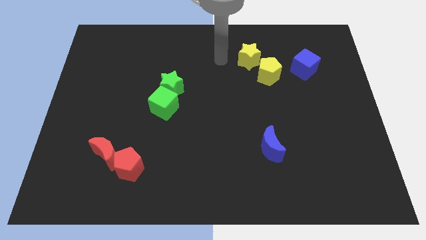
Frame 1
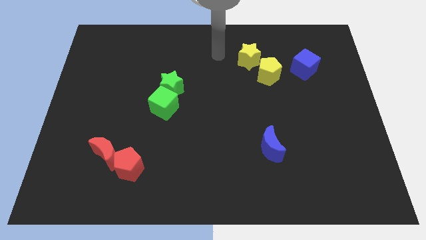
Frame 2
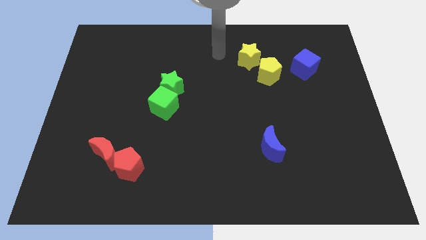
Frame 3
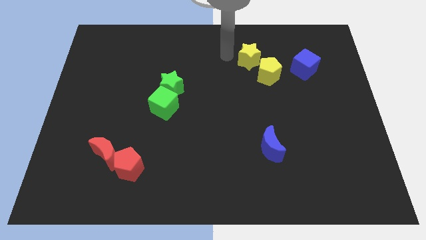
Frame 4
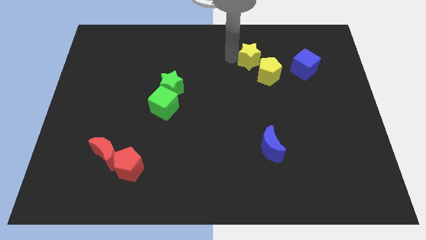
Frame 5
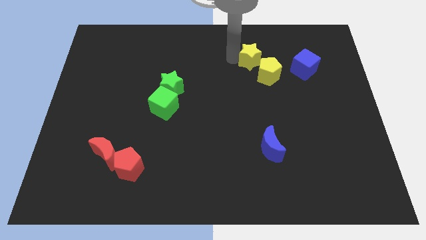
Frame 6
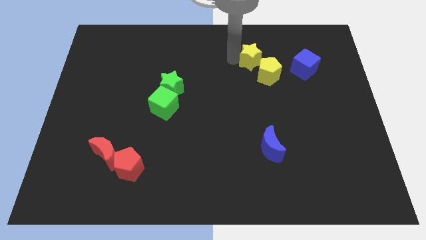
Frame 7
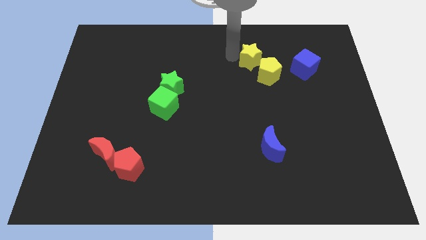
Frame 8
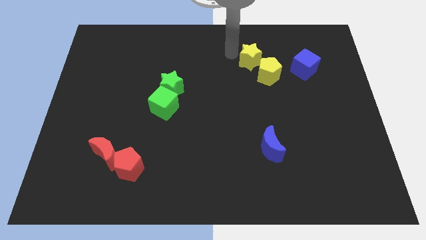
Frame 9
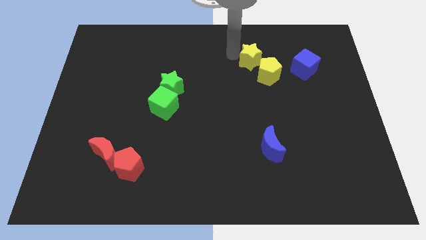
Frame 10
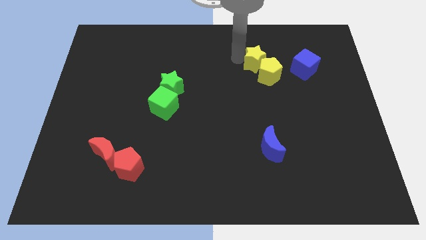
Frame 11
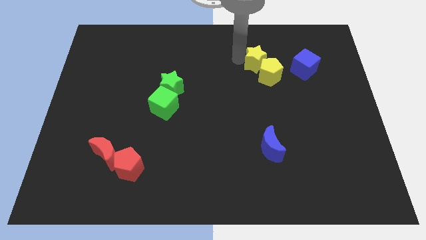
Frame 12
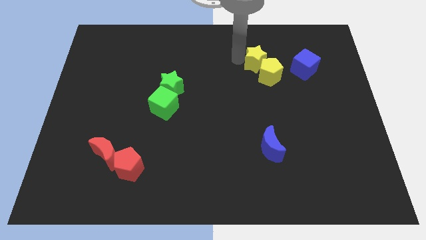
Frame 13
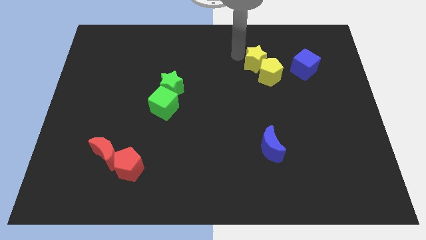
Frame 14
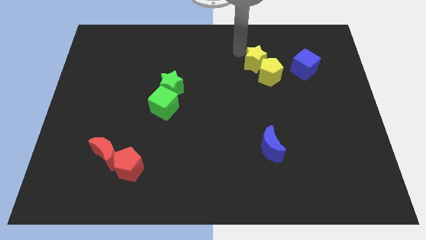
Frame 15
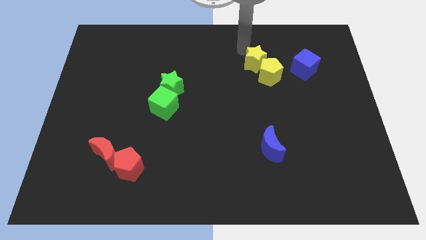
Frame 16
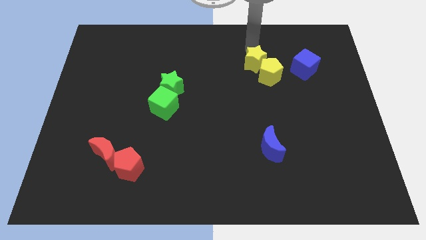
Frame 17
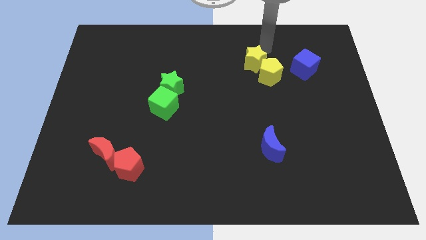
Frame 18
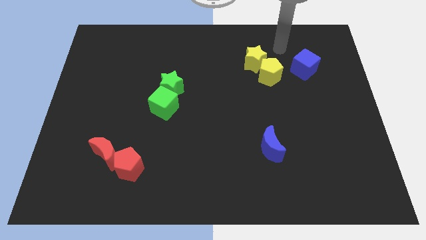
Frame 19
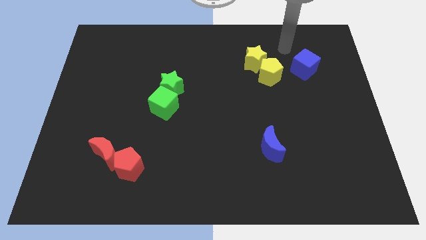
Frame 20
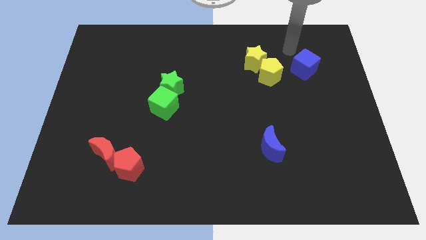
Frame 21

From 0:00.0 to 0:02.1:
slightly push the yellow star into the yellow pentagon

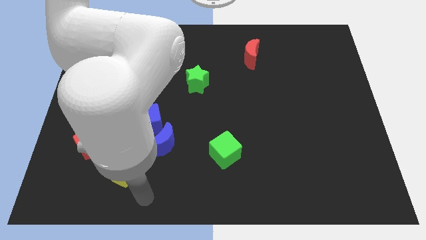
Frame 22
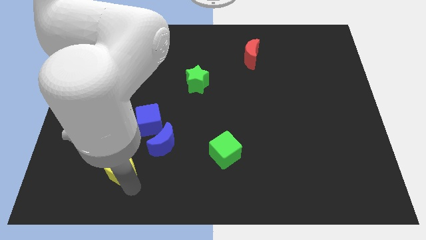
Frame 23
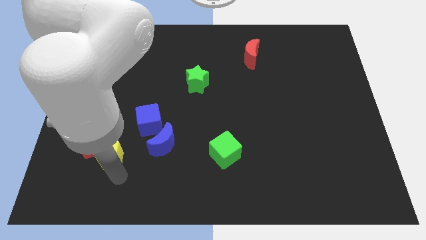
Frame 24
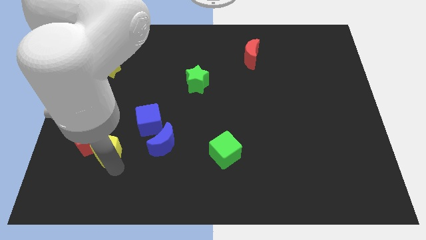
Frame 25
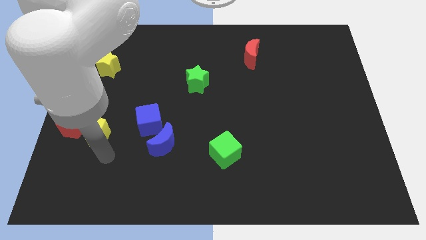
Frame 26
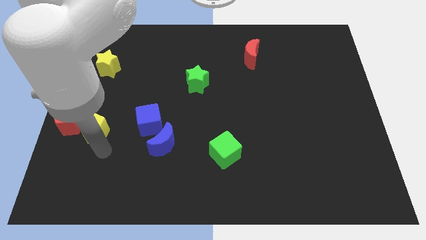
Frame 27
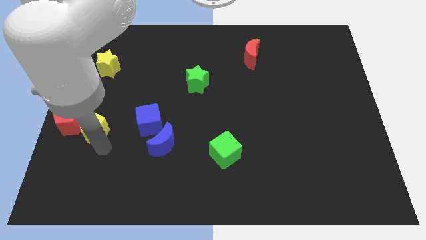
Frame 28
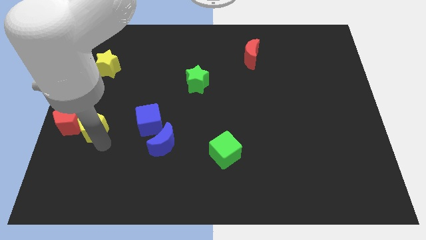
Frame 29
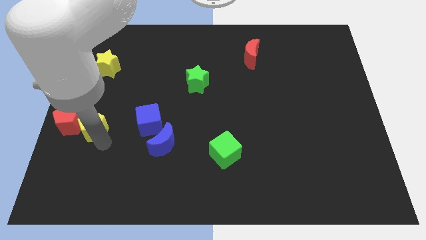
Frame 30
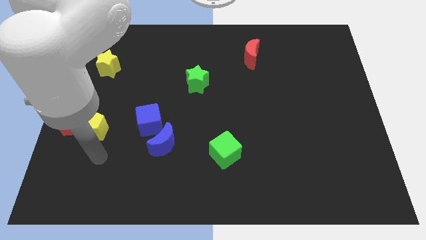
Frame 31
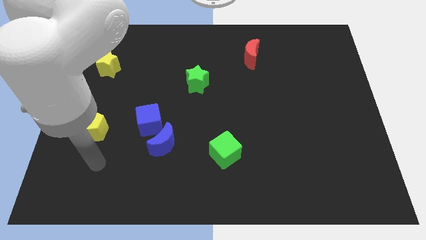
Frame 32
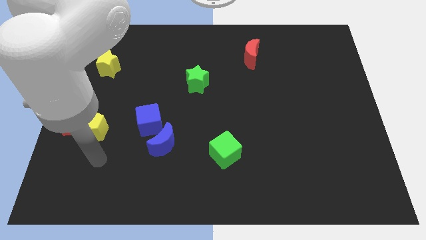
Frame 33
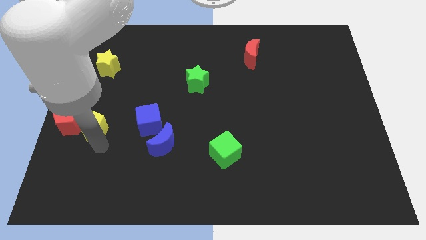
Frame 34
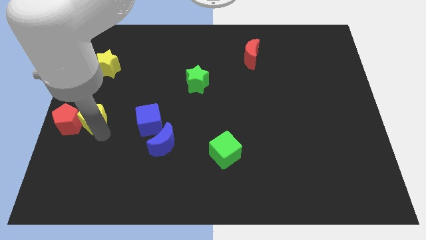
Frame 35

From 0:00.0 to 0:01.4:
push the yellow pentagon and red pentagon to the left side of the blue cube

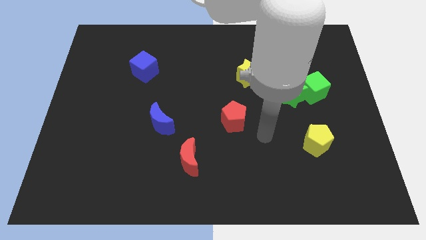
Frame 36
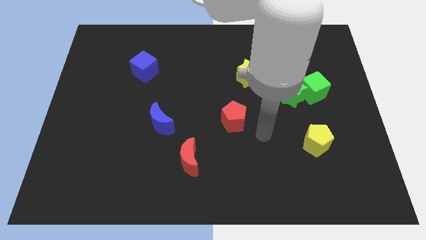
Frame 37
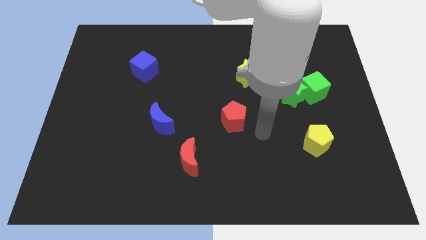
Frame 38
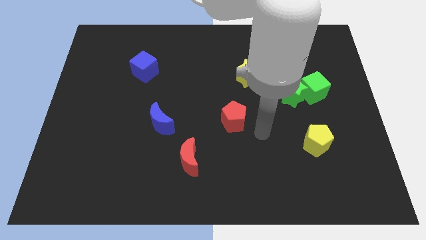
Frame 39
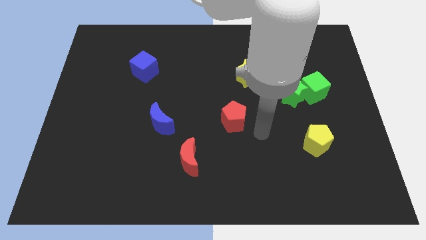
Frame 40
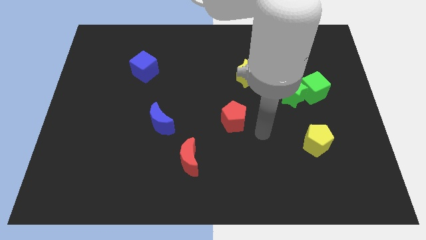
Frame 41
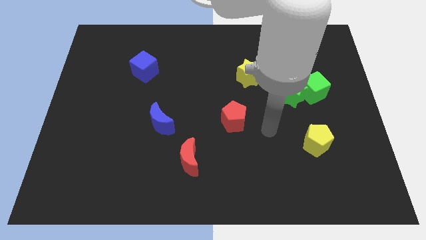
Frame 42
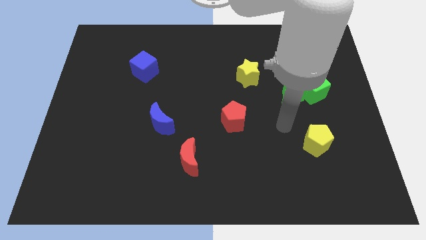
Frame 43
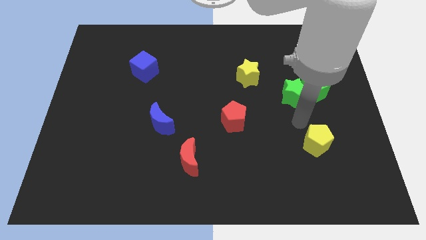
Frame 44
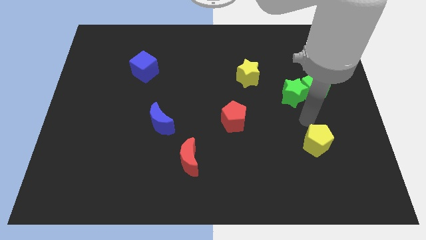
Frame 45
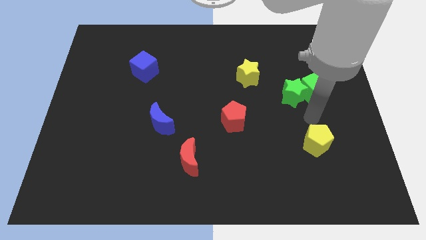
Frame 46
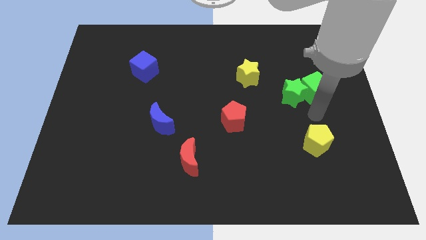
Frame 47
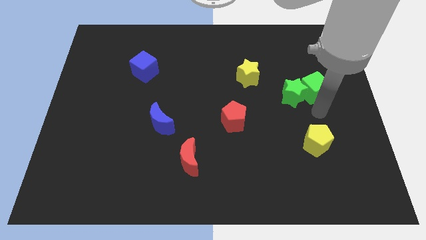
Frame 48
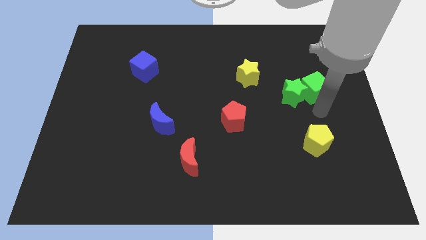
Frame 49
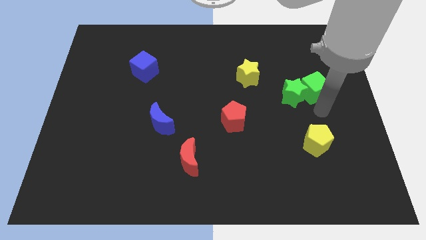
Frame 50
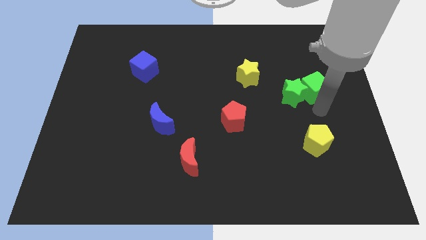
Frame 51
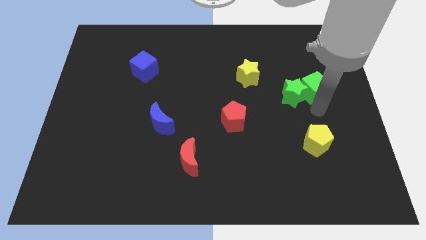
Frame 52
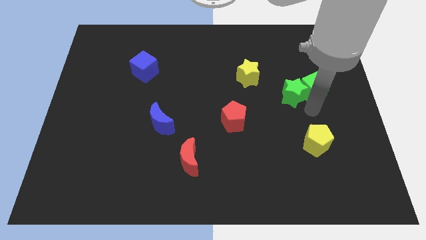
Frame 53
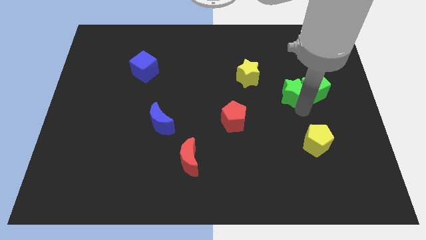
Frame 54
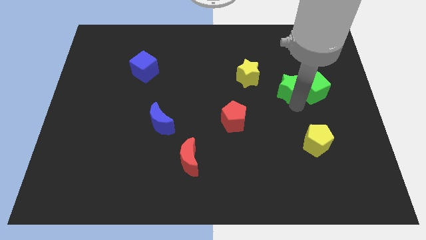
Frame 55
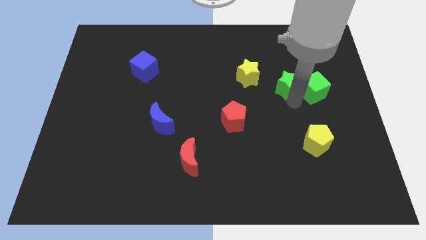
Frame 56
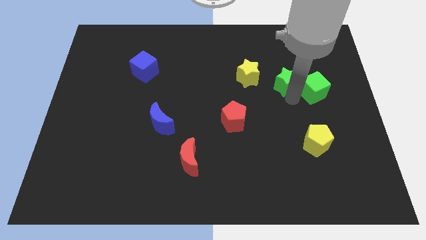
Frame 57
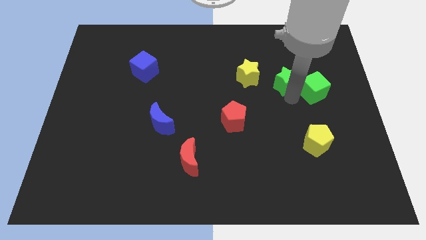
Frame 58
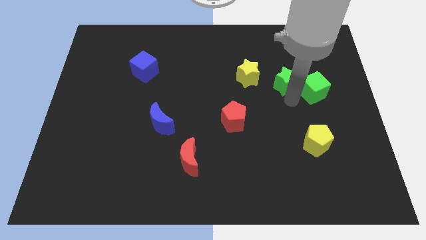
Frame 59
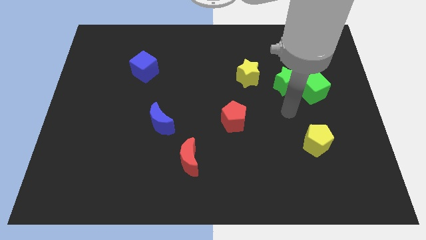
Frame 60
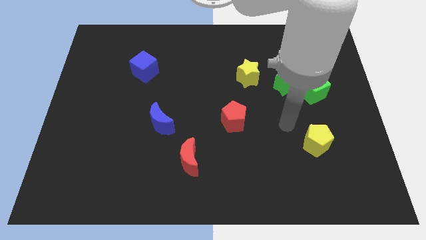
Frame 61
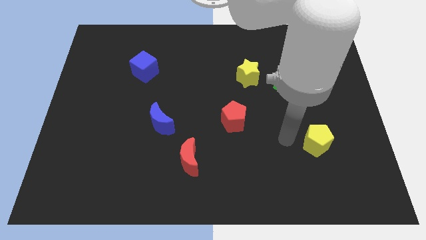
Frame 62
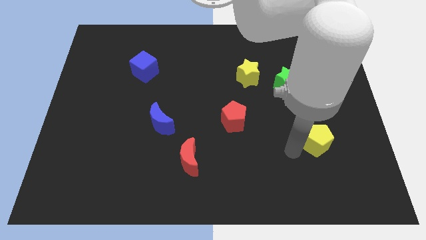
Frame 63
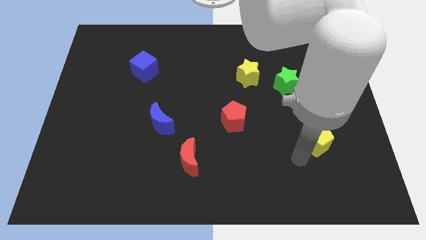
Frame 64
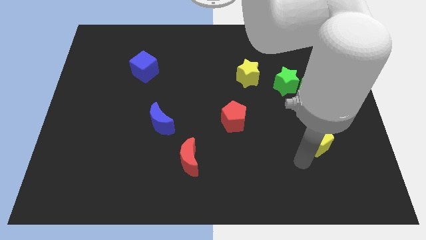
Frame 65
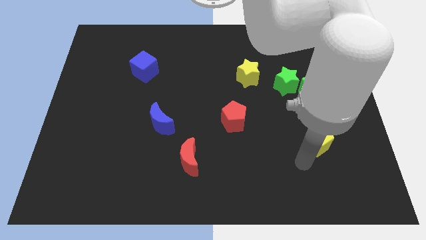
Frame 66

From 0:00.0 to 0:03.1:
slightly push the green star up

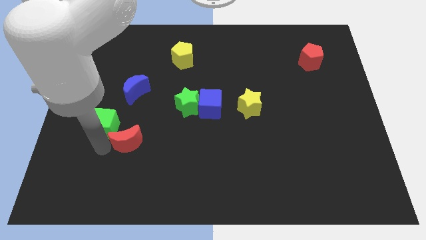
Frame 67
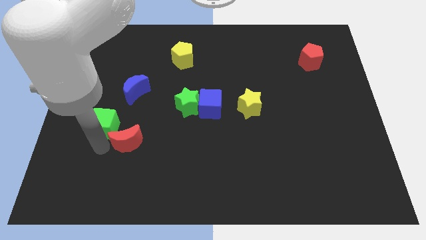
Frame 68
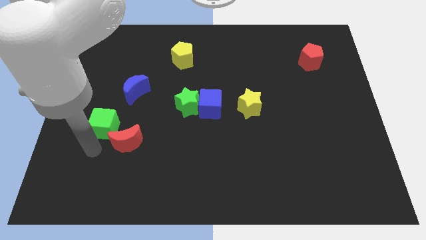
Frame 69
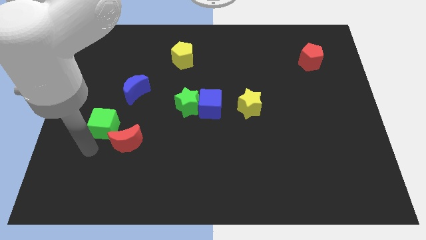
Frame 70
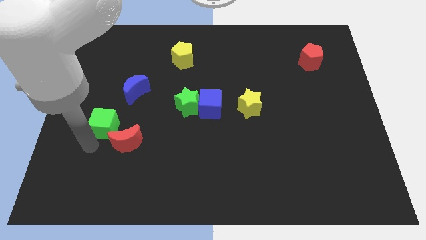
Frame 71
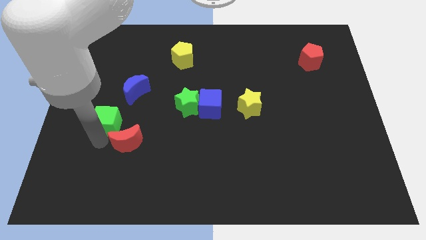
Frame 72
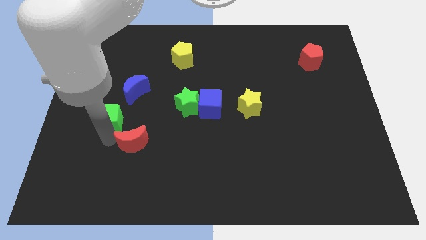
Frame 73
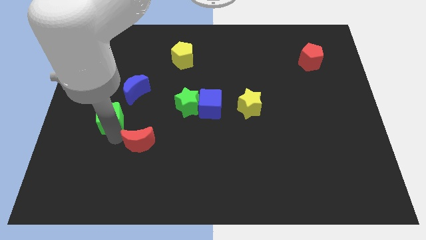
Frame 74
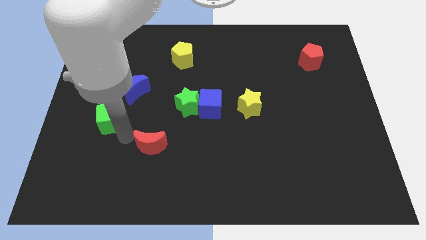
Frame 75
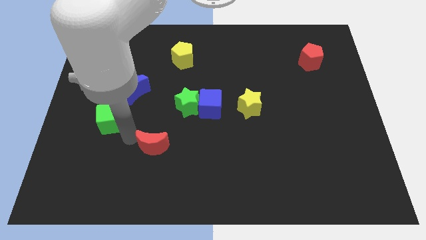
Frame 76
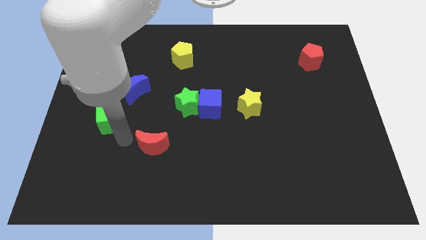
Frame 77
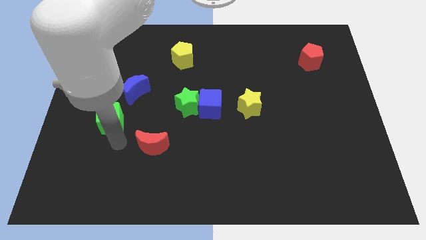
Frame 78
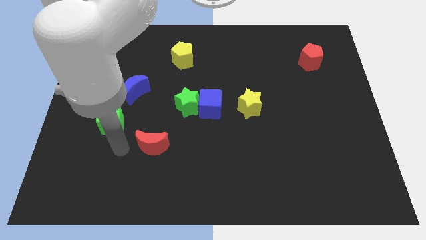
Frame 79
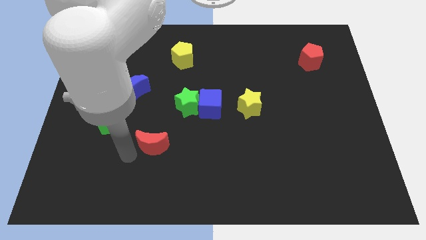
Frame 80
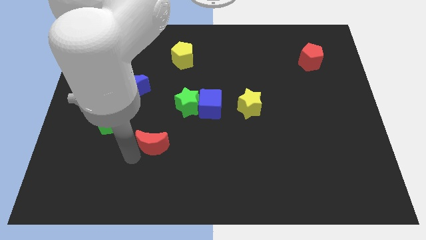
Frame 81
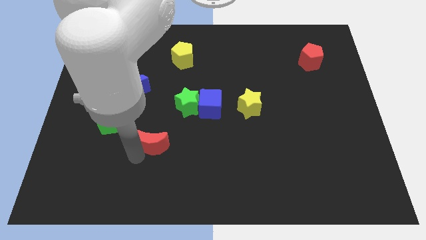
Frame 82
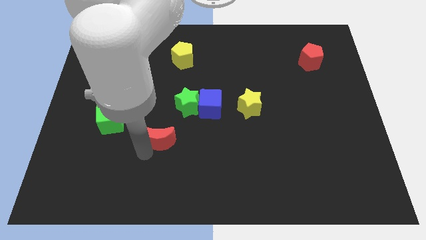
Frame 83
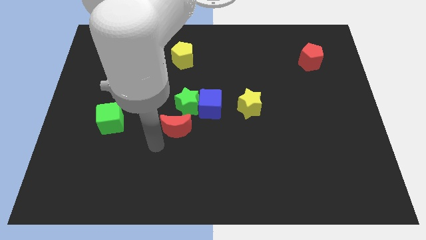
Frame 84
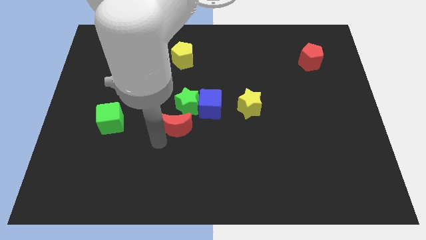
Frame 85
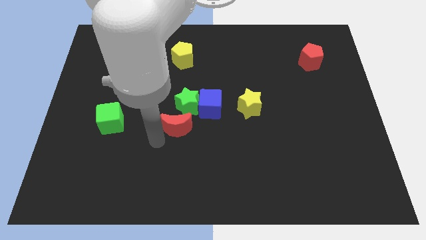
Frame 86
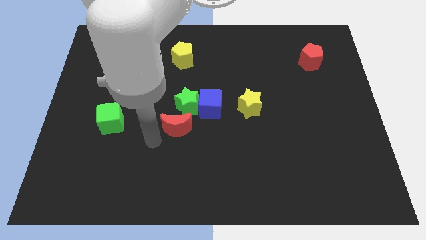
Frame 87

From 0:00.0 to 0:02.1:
push the red crescent towards the bottom of the green star

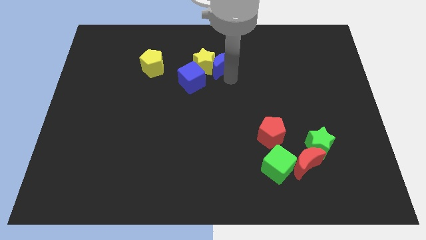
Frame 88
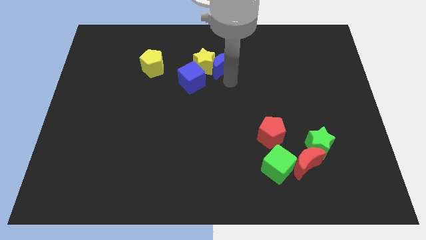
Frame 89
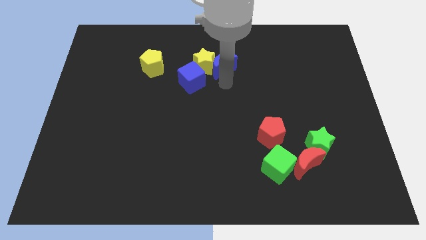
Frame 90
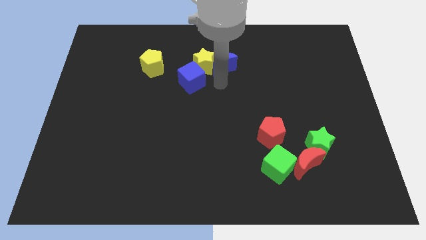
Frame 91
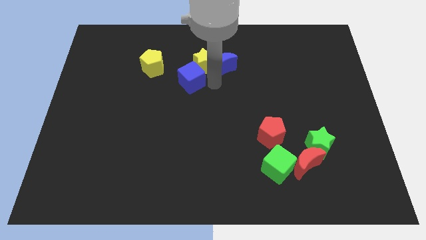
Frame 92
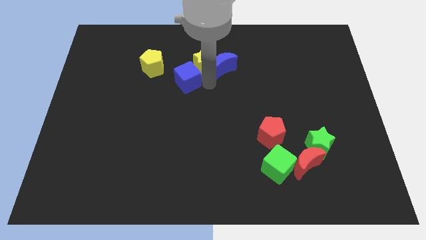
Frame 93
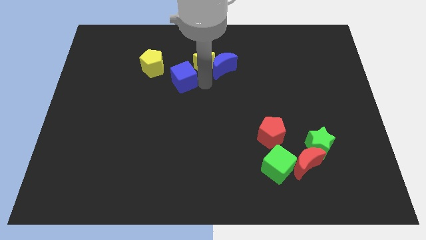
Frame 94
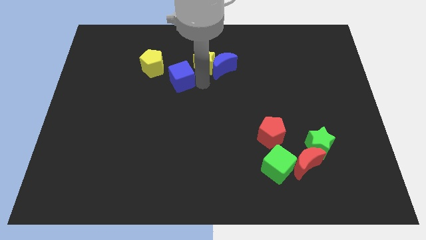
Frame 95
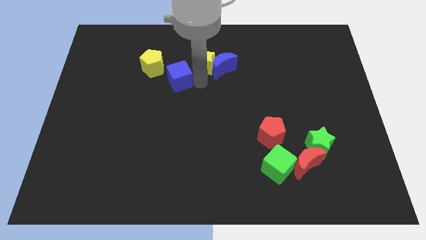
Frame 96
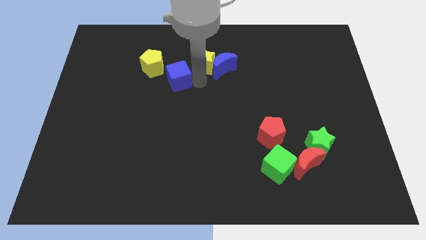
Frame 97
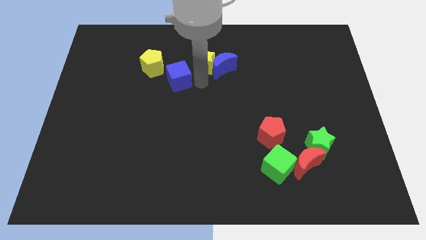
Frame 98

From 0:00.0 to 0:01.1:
move the blue cube towards the left
